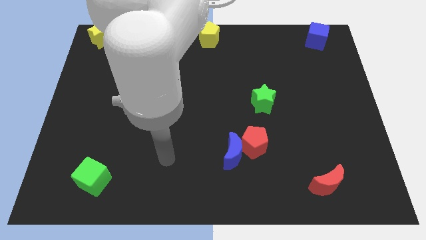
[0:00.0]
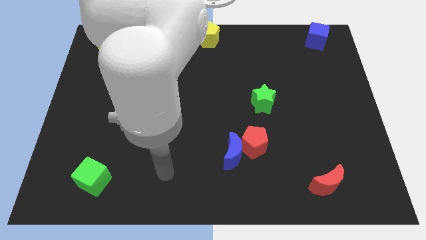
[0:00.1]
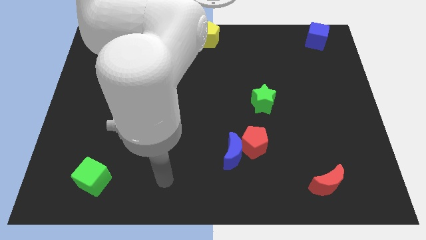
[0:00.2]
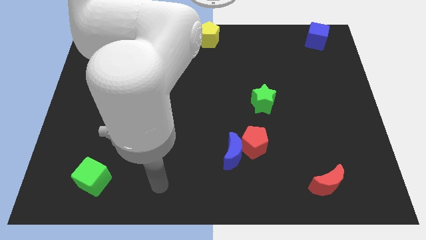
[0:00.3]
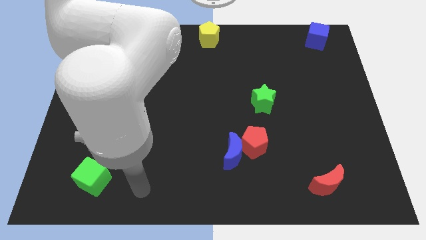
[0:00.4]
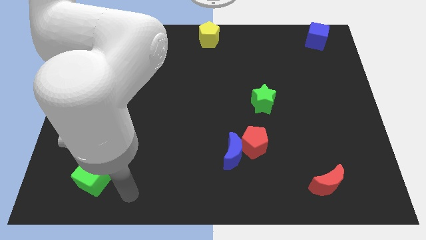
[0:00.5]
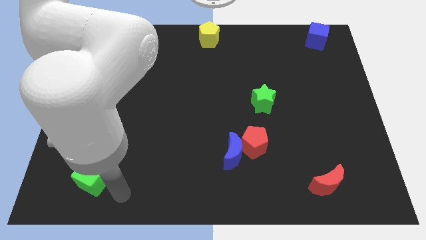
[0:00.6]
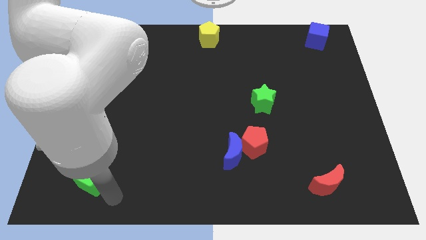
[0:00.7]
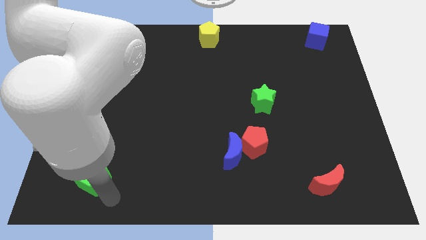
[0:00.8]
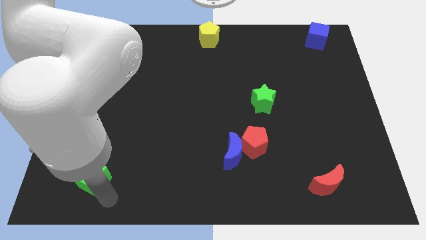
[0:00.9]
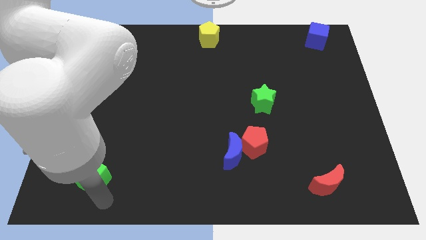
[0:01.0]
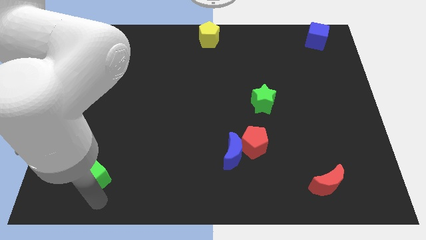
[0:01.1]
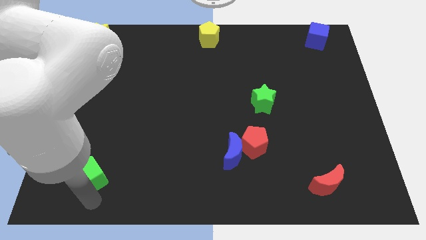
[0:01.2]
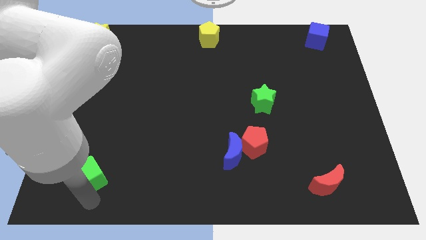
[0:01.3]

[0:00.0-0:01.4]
place the arm down to the green cube

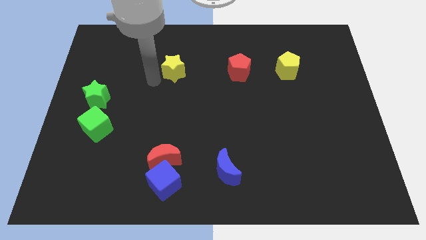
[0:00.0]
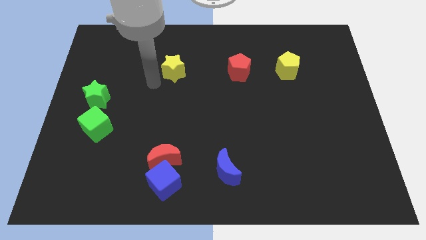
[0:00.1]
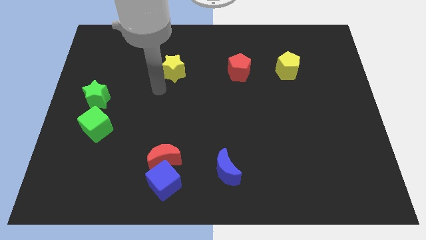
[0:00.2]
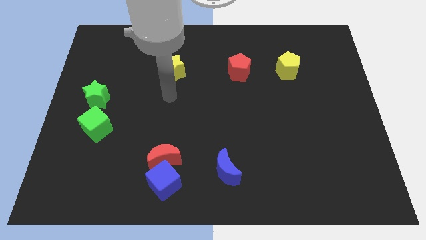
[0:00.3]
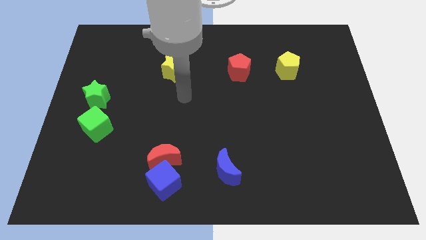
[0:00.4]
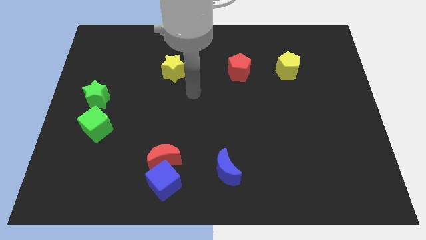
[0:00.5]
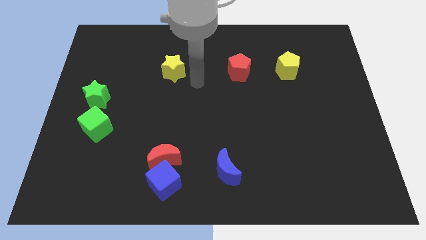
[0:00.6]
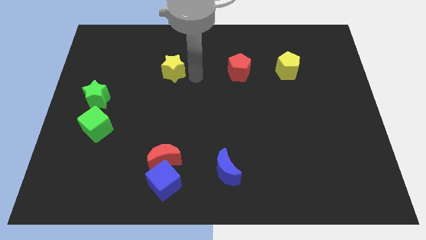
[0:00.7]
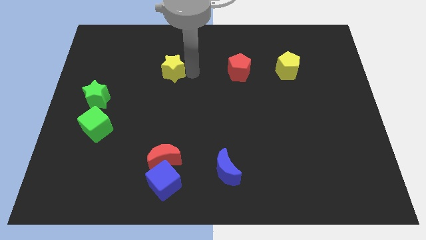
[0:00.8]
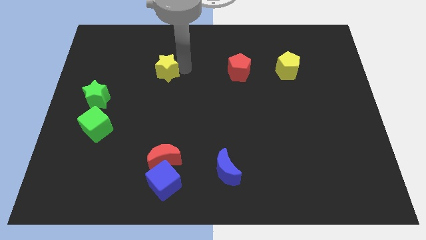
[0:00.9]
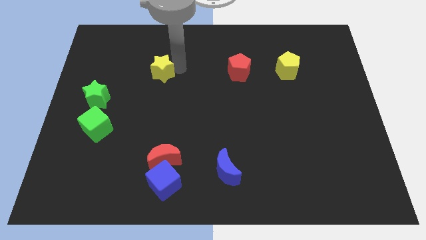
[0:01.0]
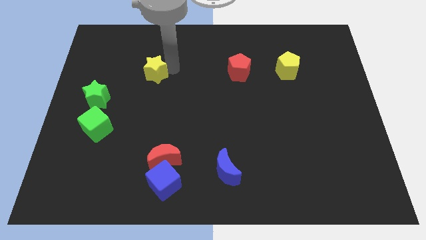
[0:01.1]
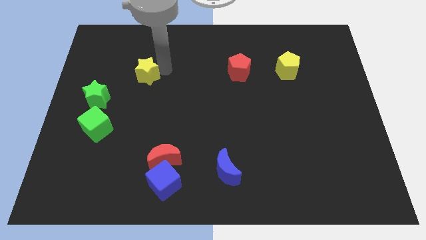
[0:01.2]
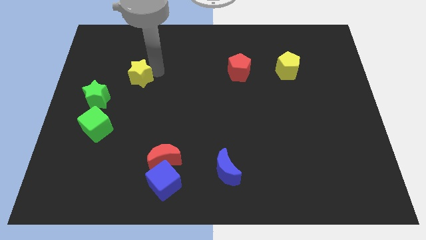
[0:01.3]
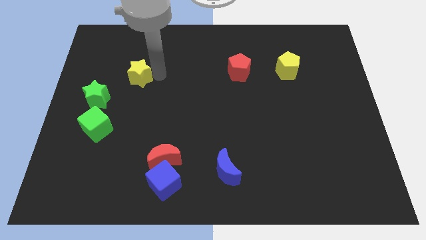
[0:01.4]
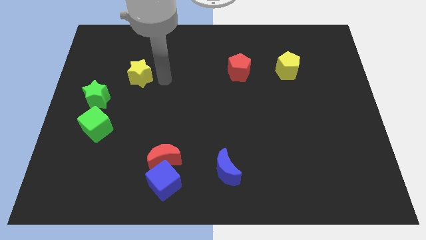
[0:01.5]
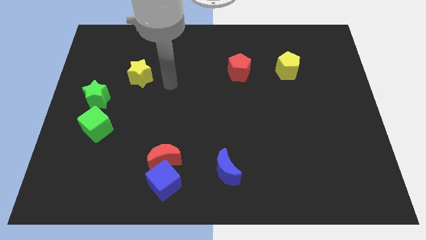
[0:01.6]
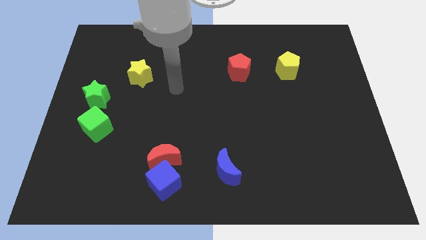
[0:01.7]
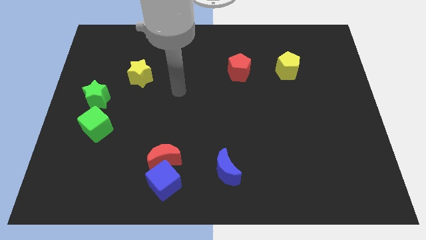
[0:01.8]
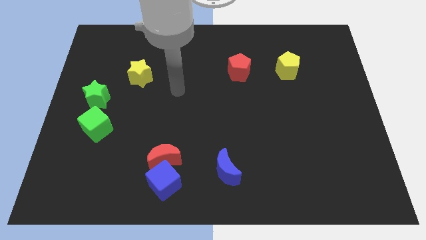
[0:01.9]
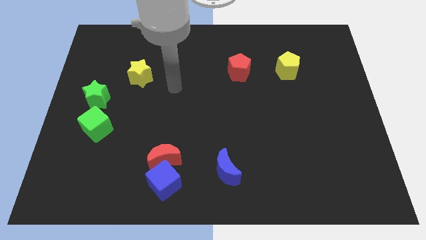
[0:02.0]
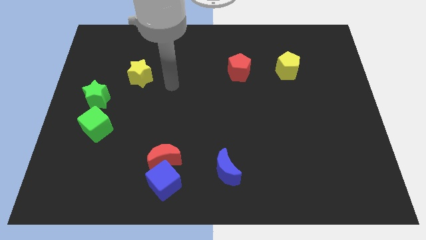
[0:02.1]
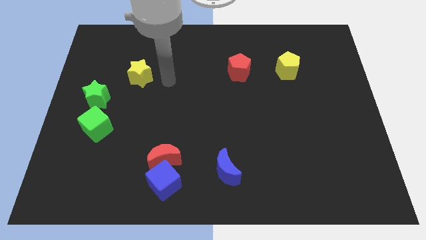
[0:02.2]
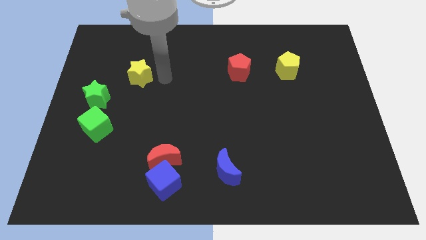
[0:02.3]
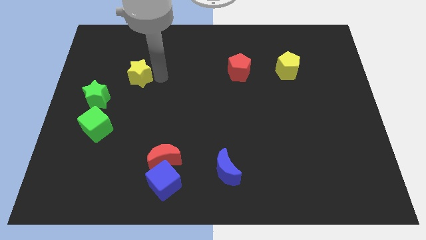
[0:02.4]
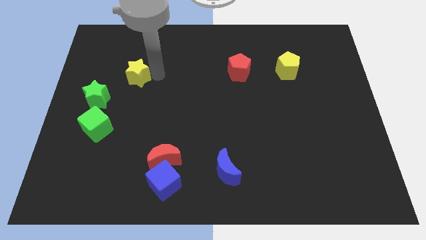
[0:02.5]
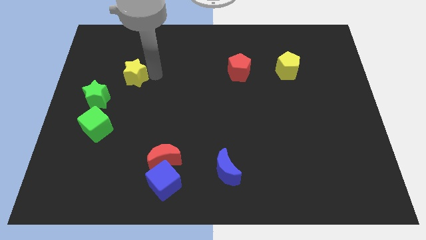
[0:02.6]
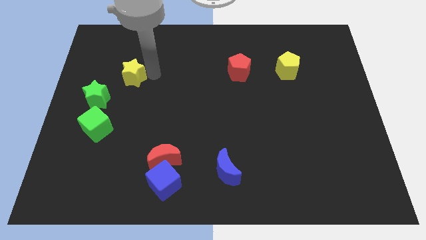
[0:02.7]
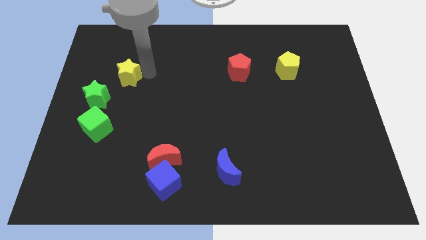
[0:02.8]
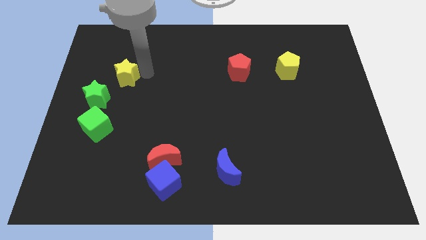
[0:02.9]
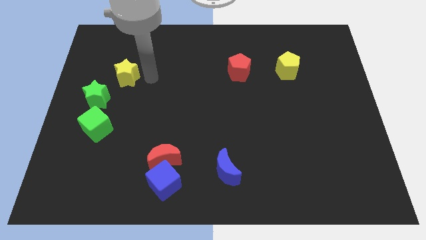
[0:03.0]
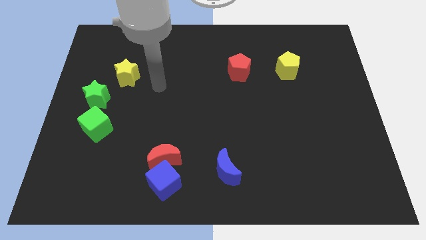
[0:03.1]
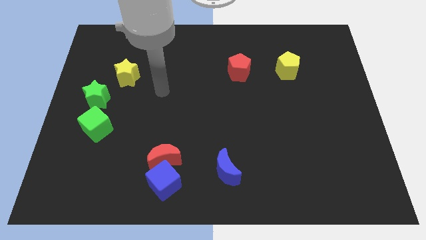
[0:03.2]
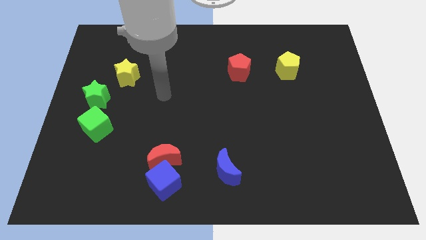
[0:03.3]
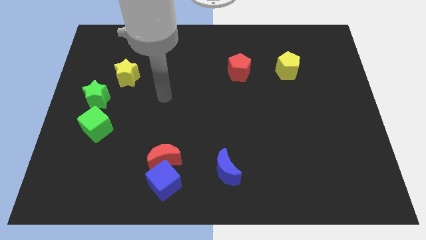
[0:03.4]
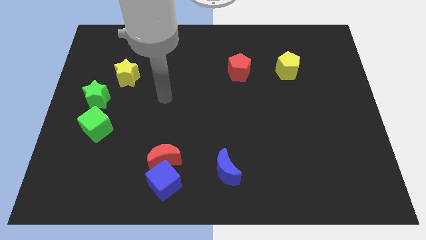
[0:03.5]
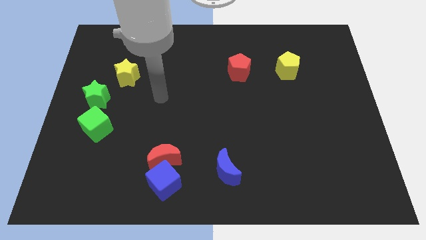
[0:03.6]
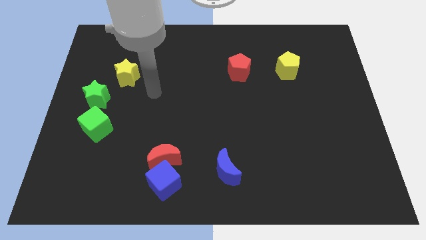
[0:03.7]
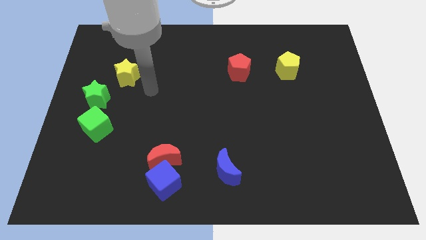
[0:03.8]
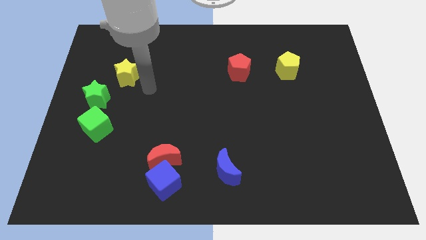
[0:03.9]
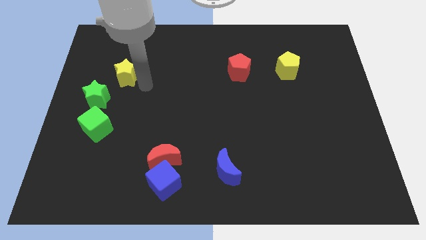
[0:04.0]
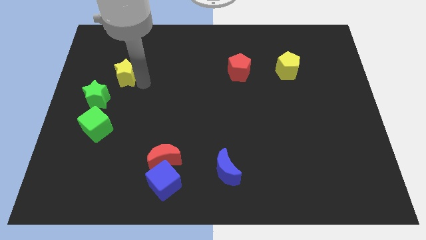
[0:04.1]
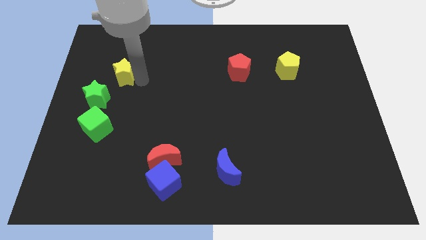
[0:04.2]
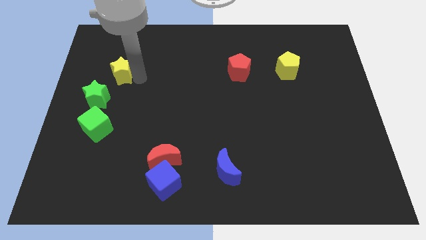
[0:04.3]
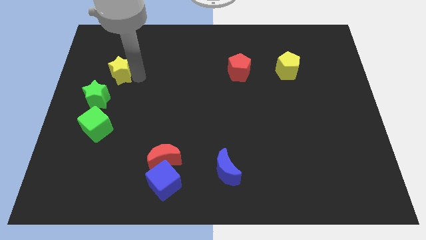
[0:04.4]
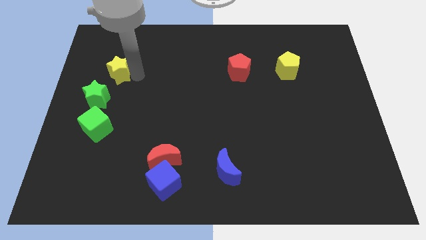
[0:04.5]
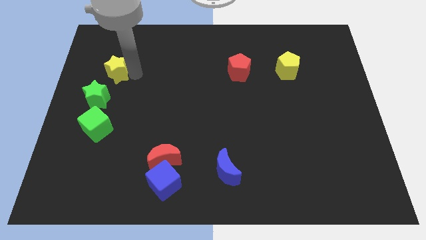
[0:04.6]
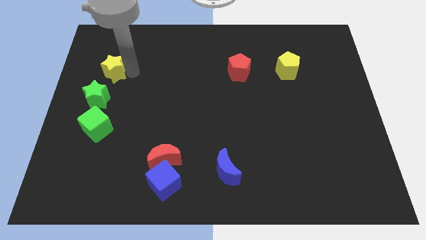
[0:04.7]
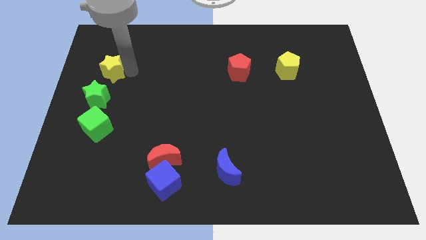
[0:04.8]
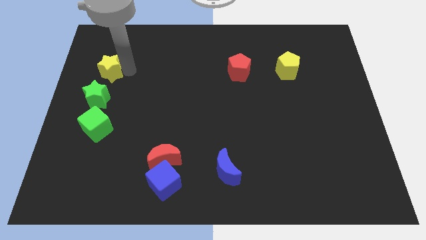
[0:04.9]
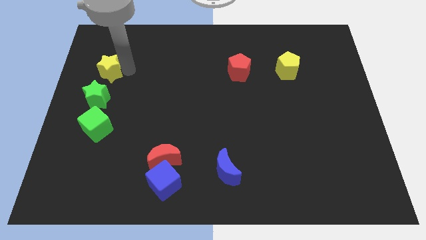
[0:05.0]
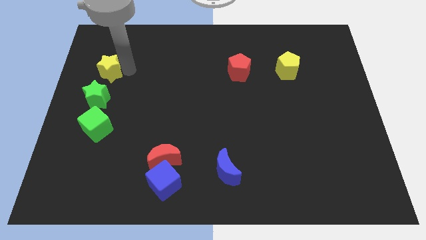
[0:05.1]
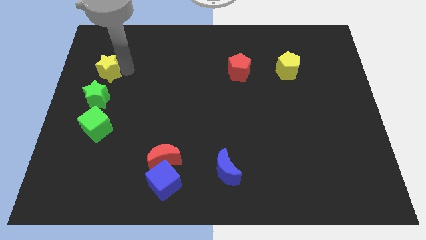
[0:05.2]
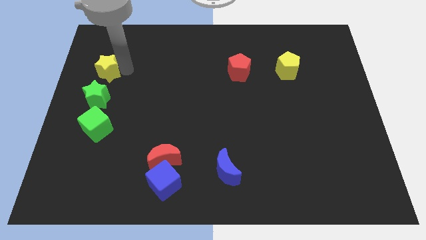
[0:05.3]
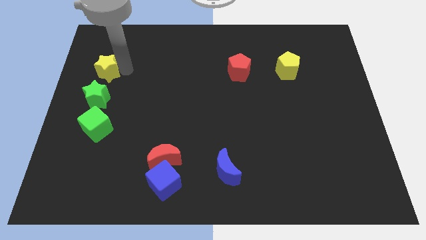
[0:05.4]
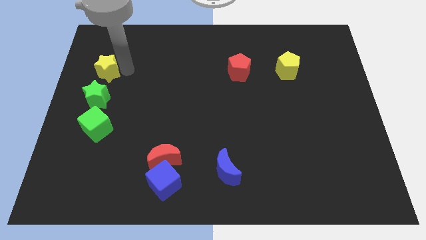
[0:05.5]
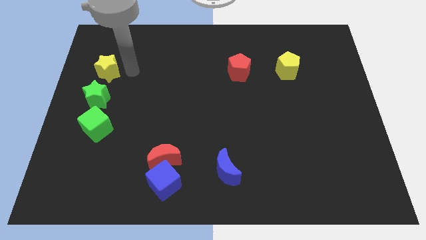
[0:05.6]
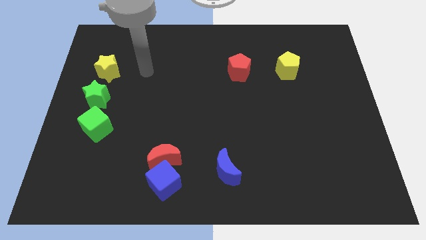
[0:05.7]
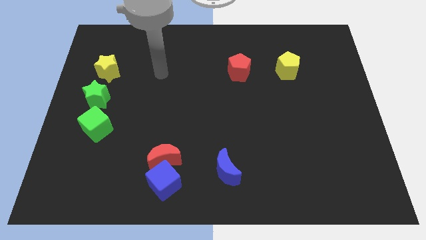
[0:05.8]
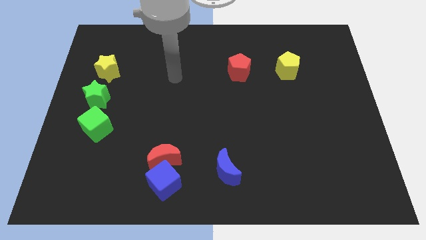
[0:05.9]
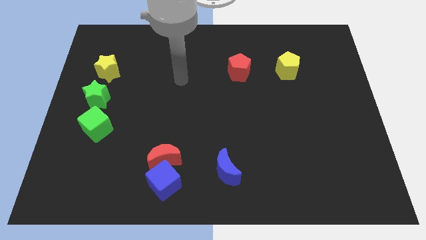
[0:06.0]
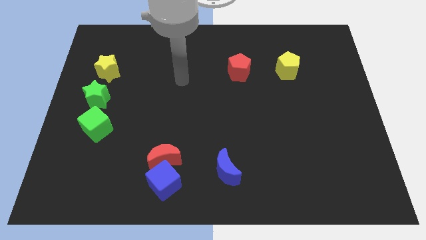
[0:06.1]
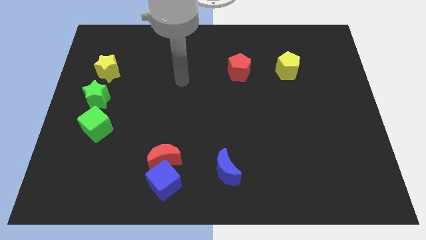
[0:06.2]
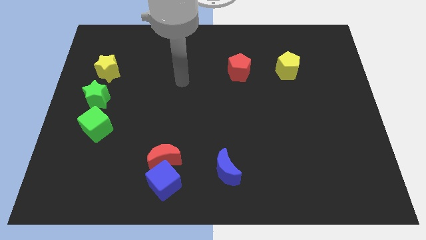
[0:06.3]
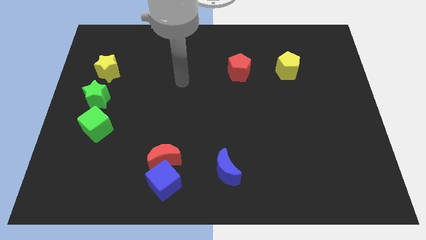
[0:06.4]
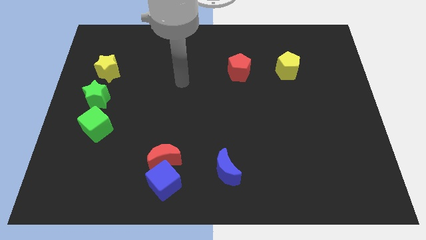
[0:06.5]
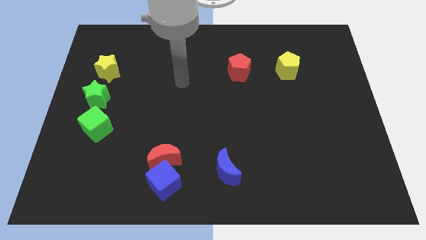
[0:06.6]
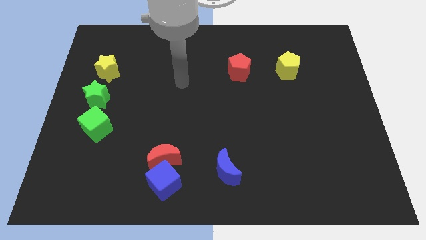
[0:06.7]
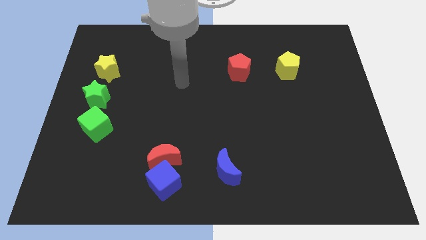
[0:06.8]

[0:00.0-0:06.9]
place the yellow star at the top of the green star

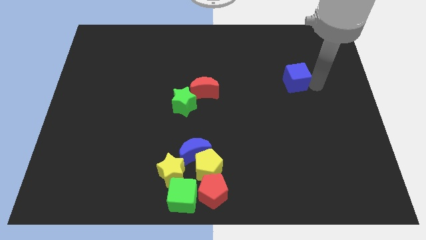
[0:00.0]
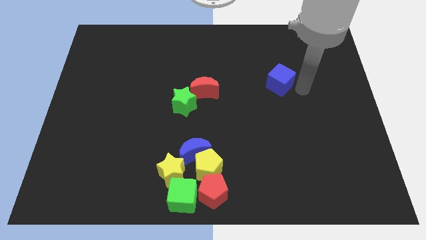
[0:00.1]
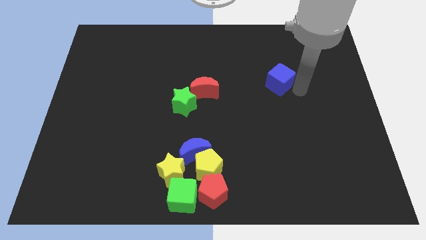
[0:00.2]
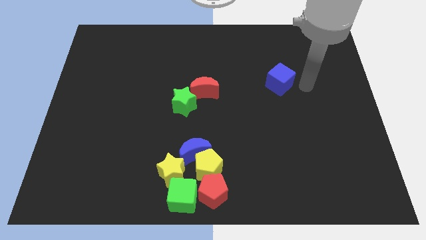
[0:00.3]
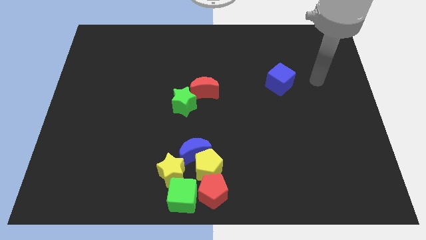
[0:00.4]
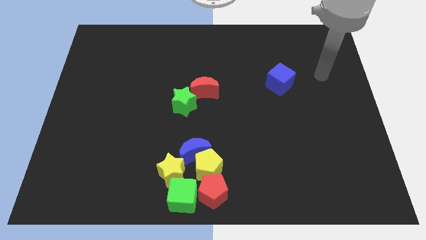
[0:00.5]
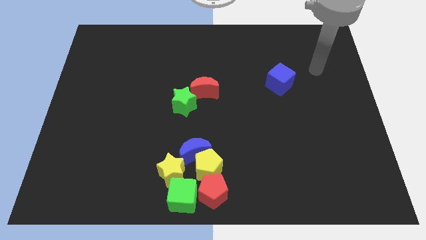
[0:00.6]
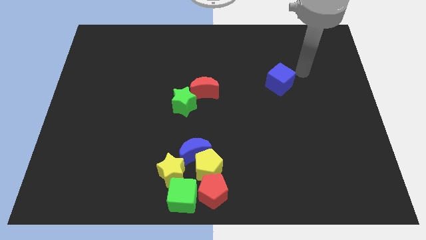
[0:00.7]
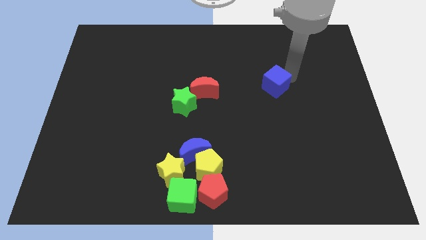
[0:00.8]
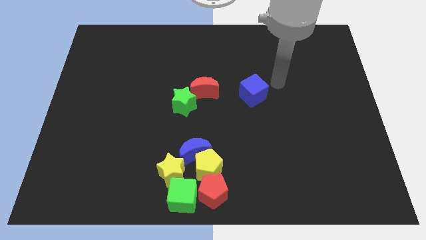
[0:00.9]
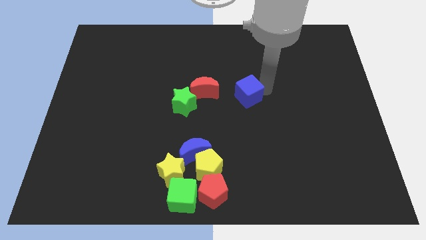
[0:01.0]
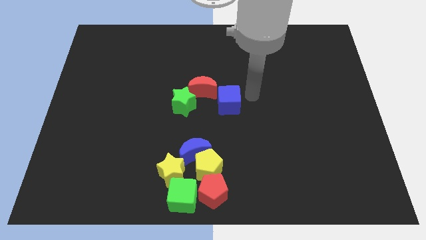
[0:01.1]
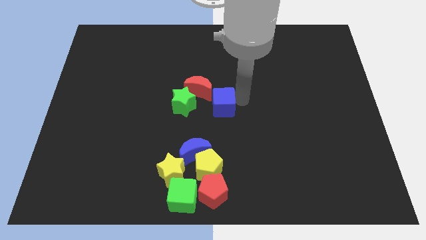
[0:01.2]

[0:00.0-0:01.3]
push the blue cube close to the red moon
